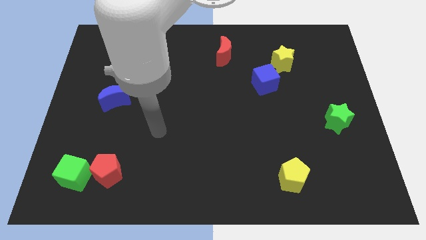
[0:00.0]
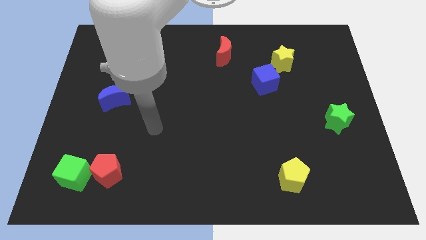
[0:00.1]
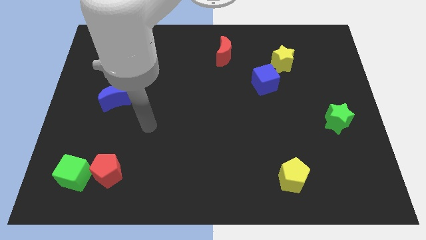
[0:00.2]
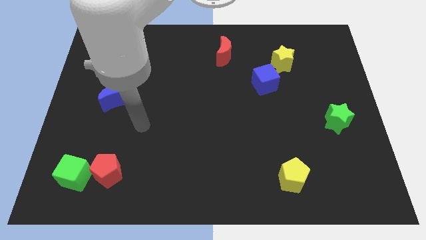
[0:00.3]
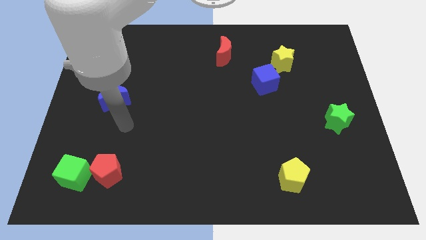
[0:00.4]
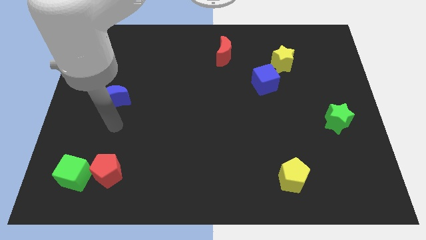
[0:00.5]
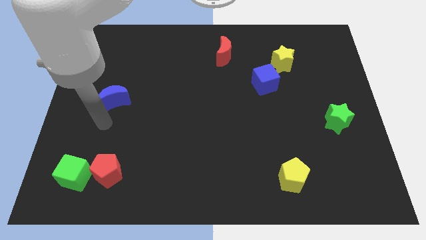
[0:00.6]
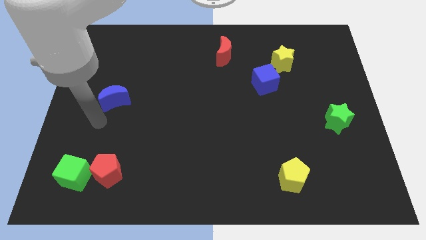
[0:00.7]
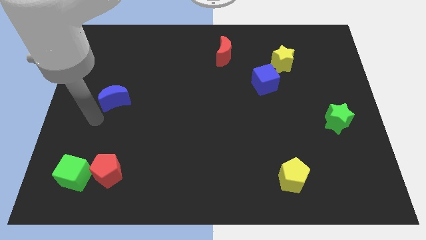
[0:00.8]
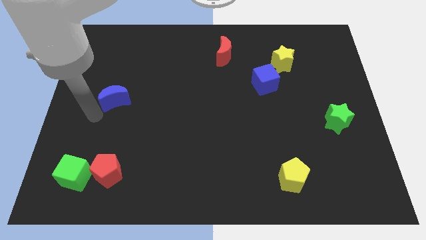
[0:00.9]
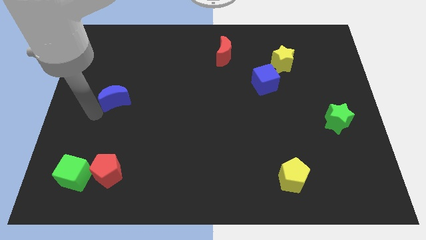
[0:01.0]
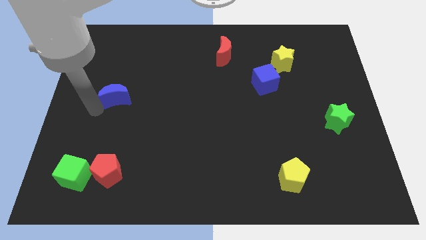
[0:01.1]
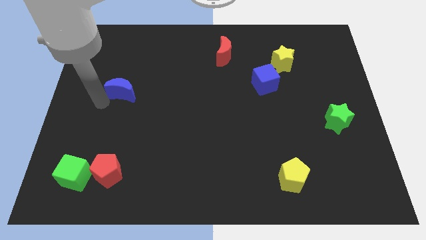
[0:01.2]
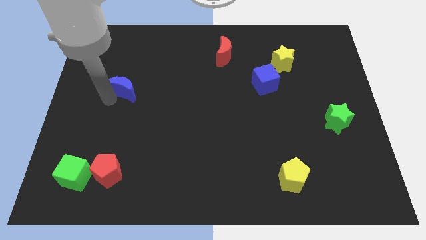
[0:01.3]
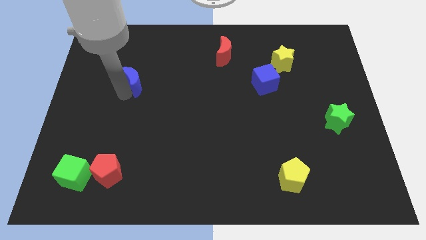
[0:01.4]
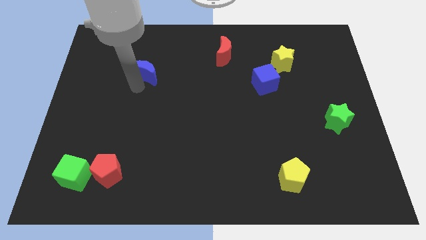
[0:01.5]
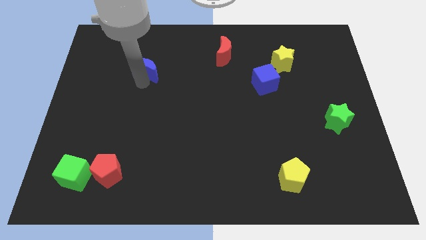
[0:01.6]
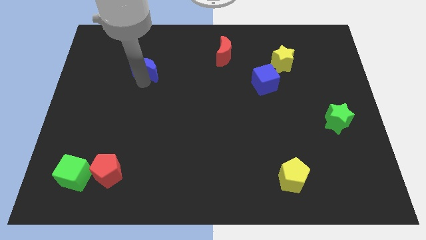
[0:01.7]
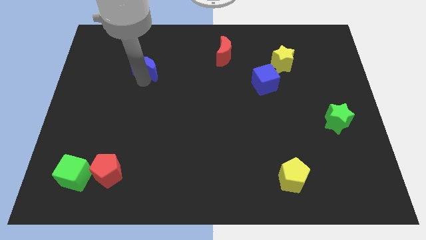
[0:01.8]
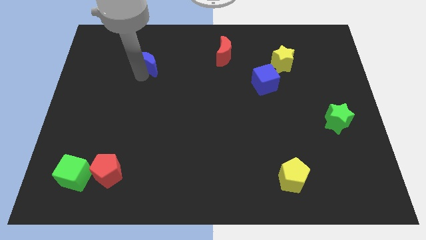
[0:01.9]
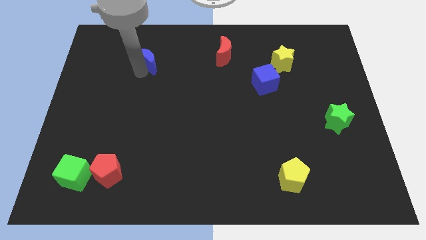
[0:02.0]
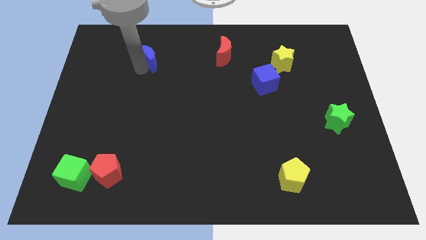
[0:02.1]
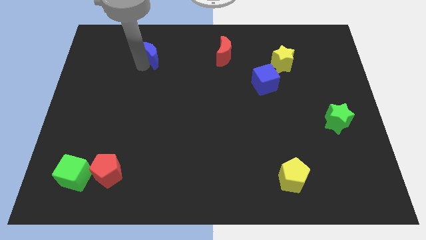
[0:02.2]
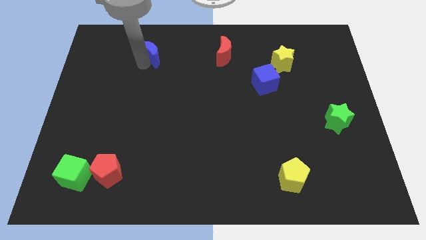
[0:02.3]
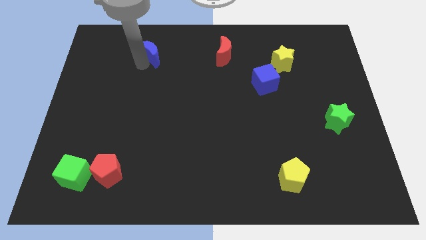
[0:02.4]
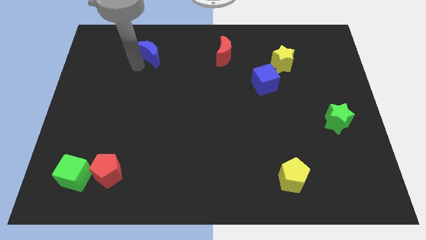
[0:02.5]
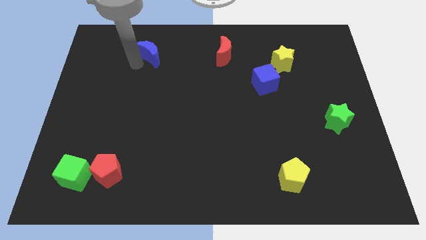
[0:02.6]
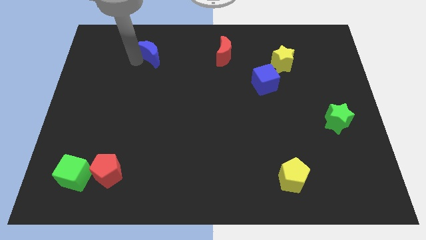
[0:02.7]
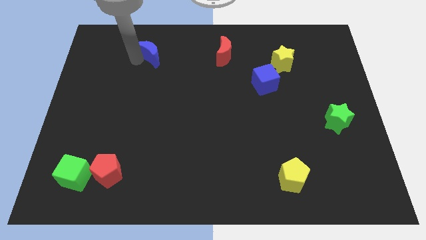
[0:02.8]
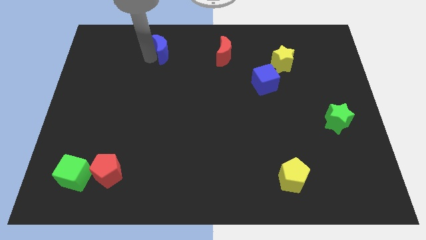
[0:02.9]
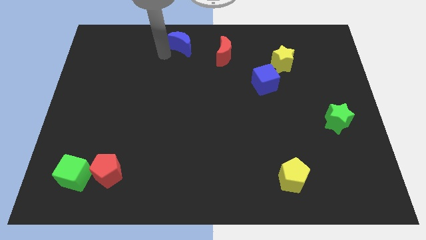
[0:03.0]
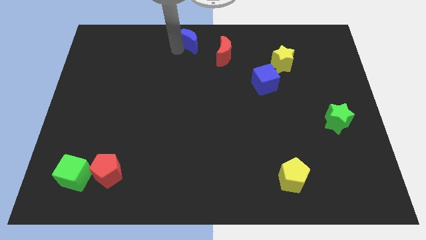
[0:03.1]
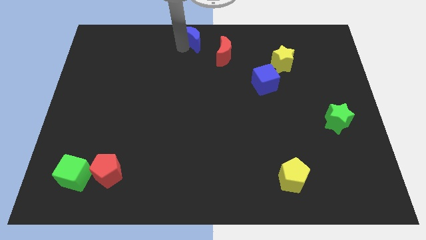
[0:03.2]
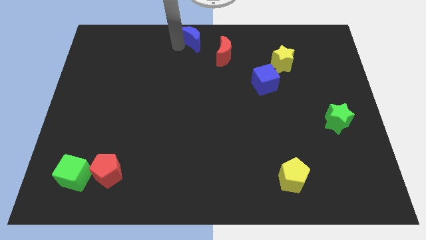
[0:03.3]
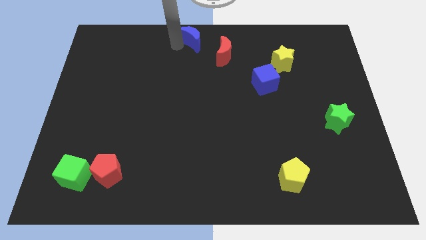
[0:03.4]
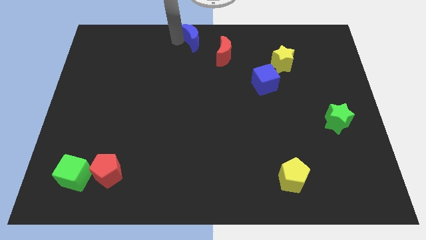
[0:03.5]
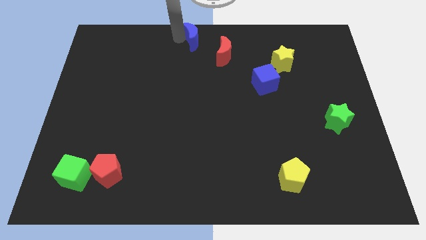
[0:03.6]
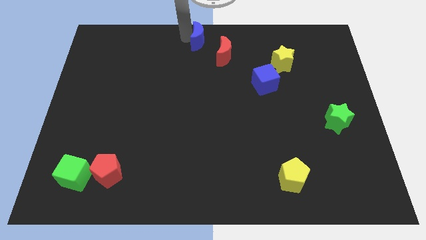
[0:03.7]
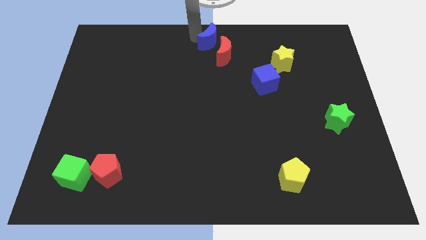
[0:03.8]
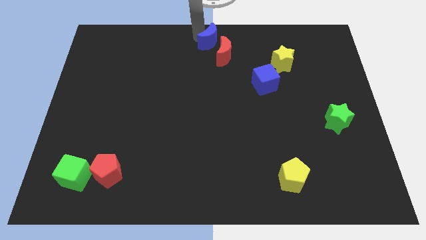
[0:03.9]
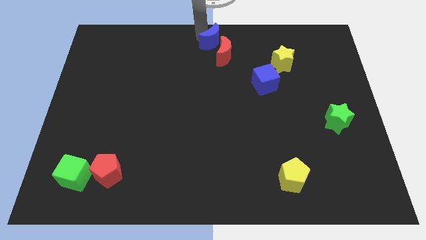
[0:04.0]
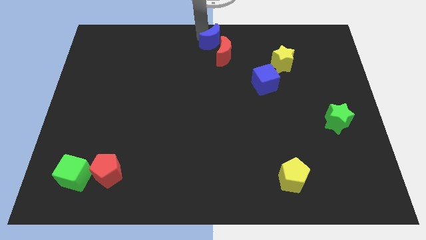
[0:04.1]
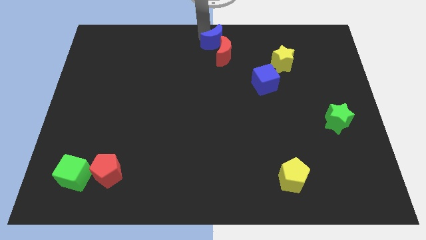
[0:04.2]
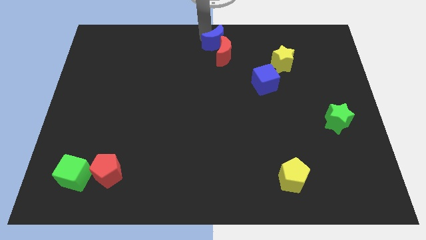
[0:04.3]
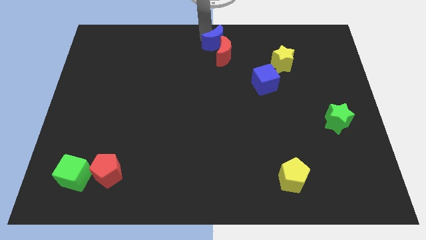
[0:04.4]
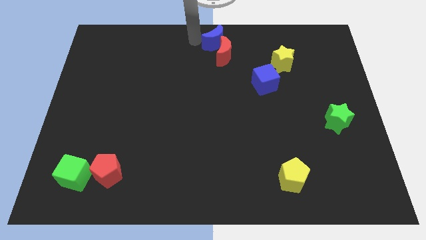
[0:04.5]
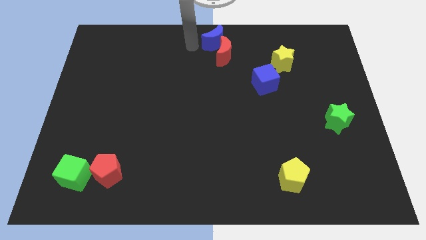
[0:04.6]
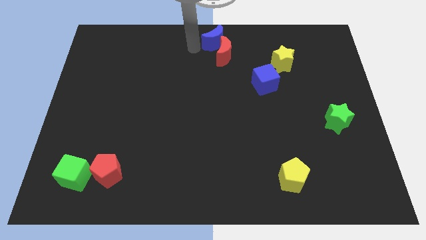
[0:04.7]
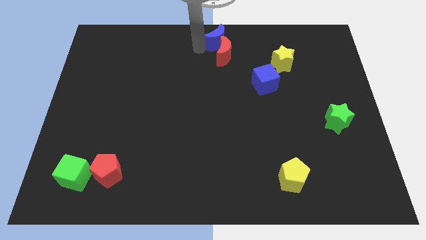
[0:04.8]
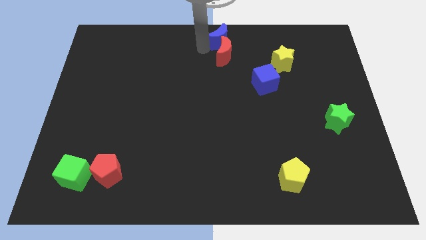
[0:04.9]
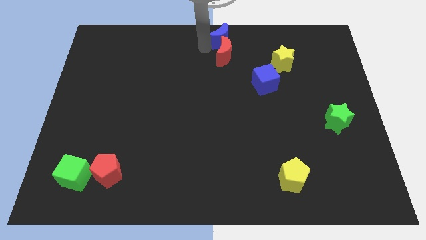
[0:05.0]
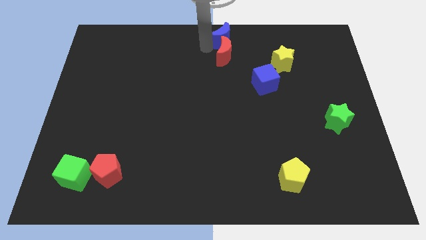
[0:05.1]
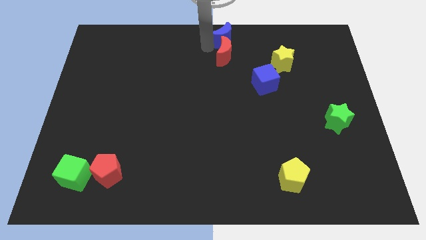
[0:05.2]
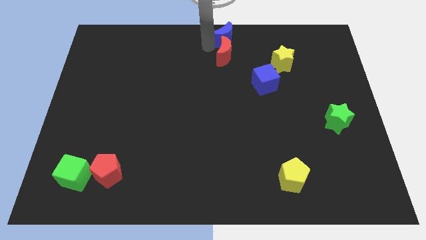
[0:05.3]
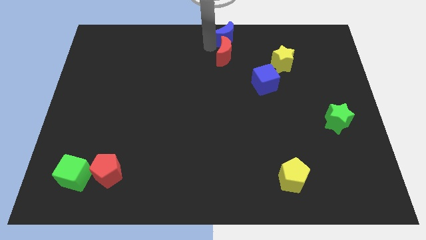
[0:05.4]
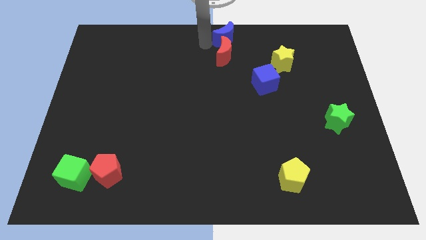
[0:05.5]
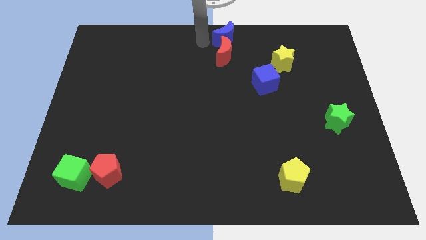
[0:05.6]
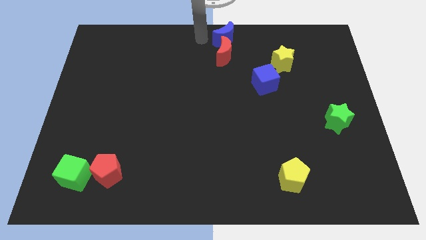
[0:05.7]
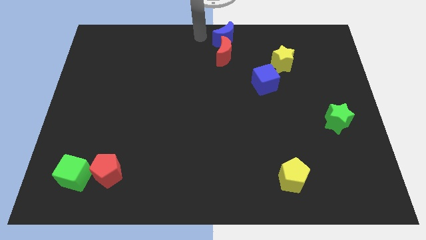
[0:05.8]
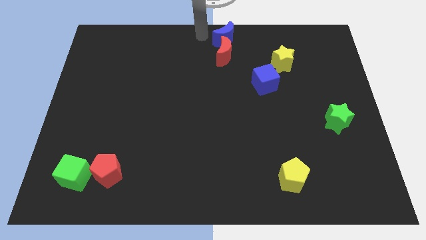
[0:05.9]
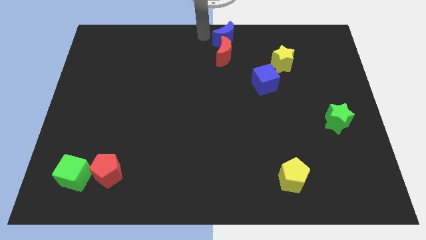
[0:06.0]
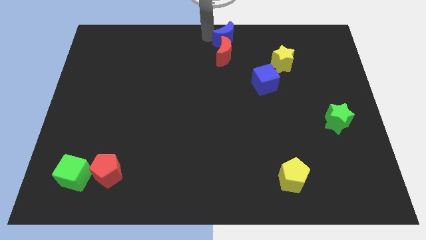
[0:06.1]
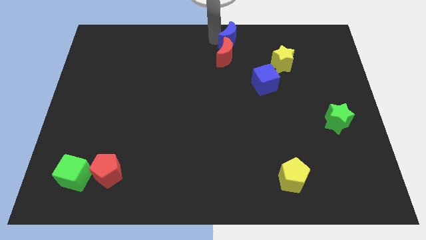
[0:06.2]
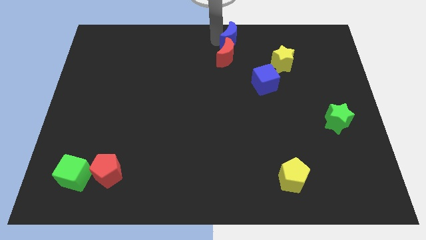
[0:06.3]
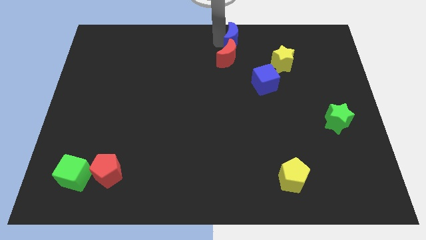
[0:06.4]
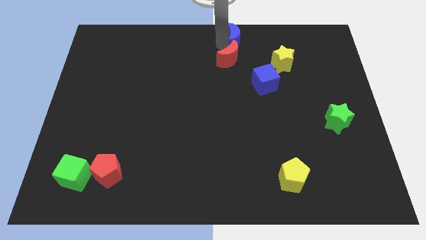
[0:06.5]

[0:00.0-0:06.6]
move the blue crescent to the top center of the board

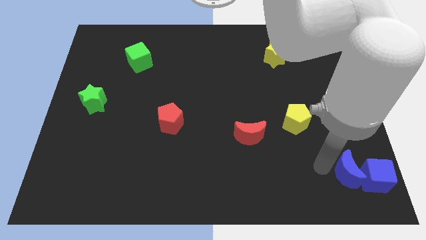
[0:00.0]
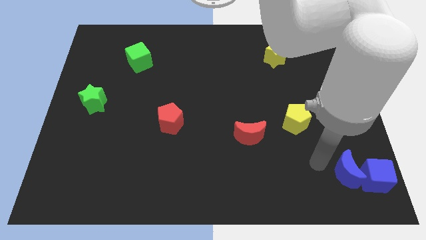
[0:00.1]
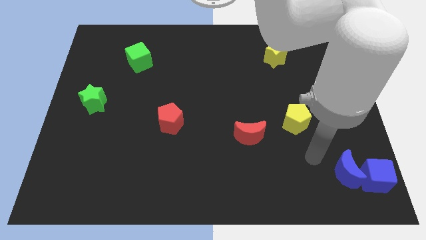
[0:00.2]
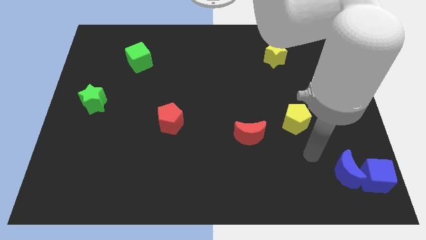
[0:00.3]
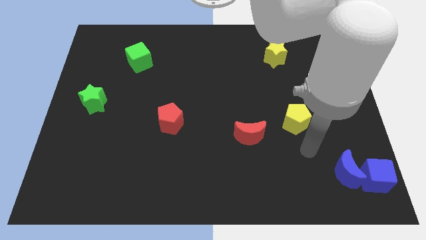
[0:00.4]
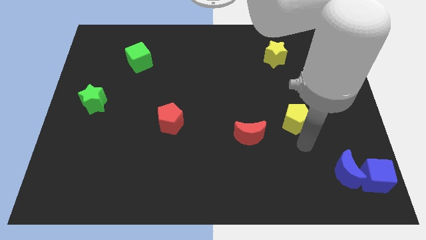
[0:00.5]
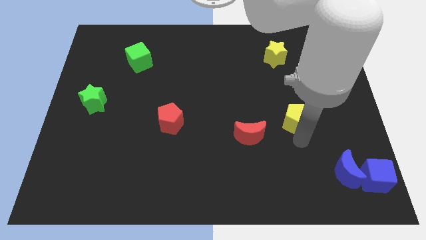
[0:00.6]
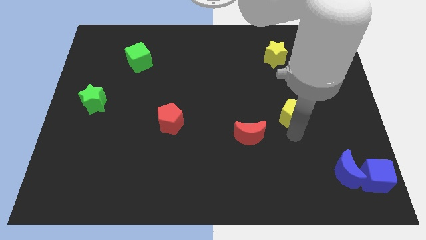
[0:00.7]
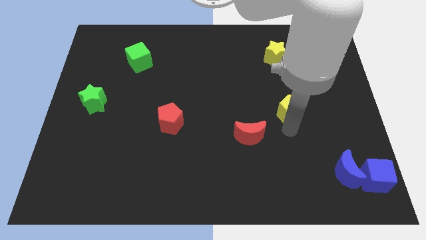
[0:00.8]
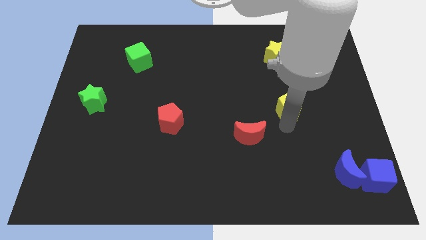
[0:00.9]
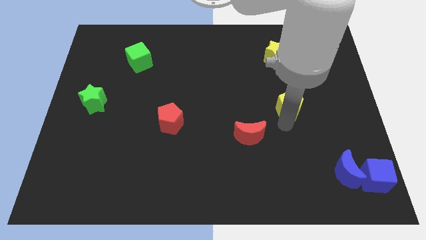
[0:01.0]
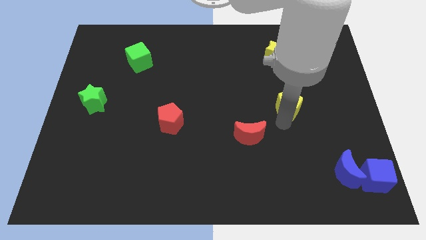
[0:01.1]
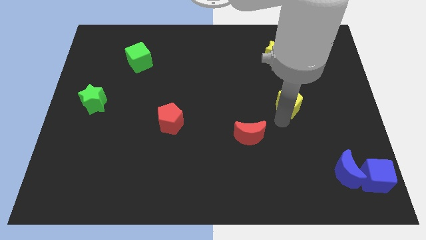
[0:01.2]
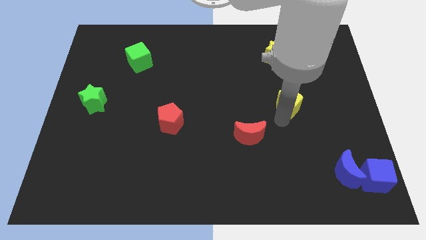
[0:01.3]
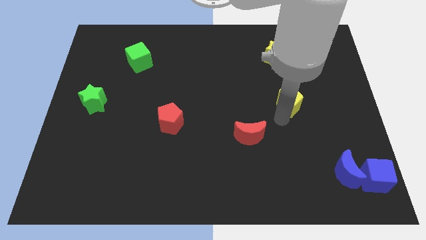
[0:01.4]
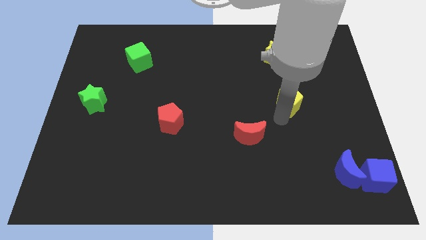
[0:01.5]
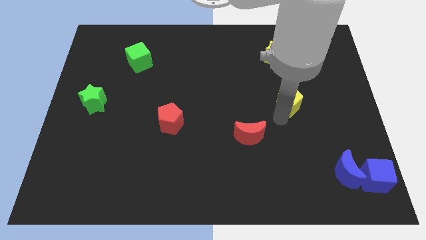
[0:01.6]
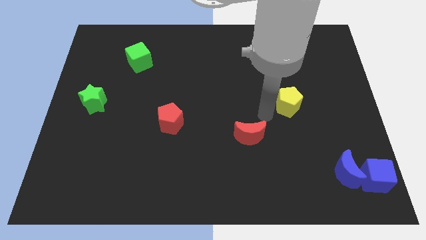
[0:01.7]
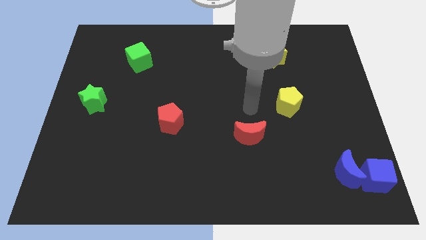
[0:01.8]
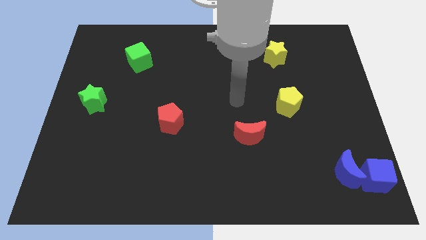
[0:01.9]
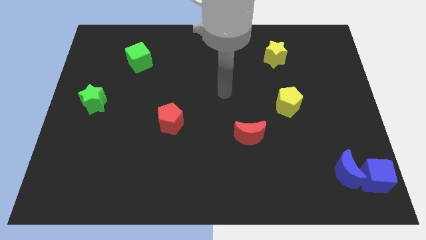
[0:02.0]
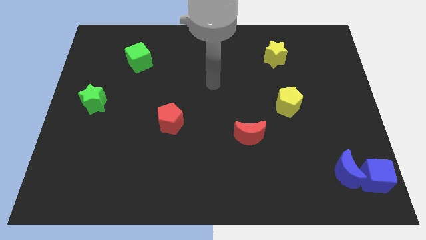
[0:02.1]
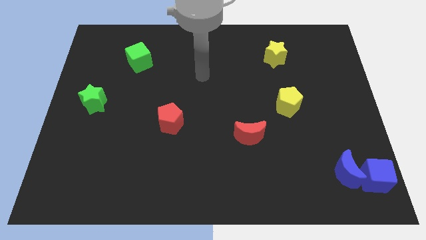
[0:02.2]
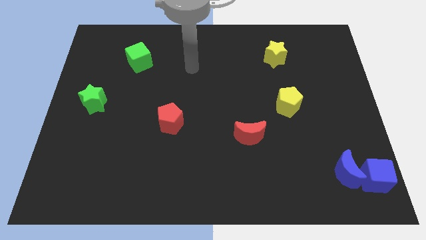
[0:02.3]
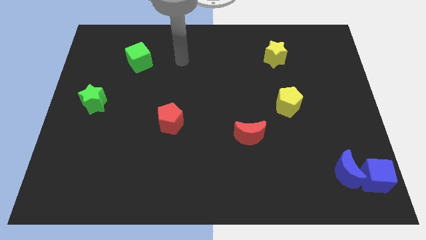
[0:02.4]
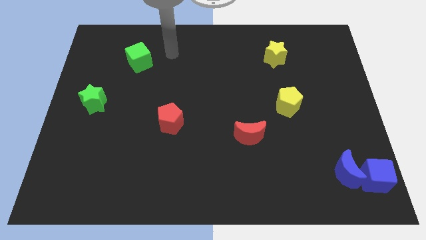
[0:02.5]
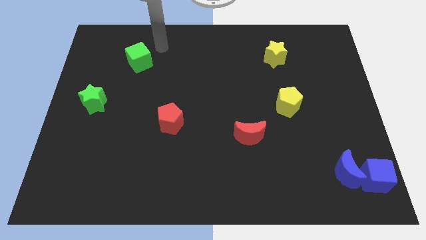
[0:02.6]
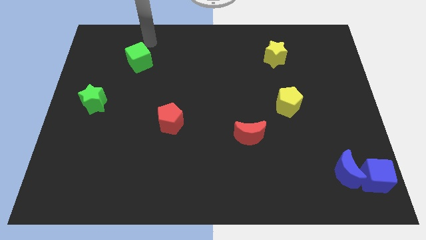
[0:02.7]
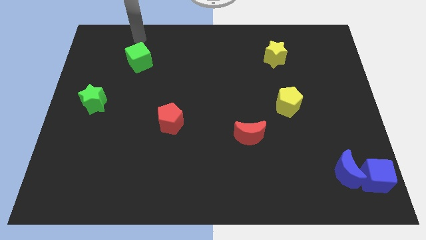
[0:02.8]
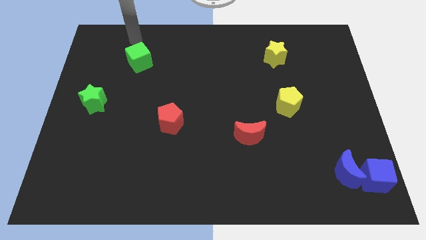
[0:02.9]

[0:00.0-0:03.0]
place the yellow pentagon to the top right of the red moon
